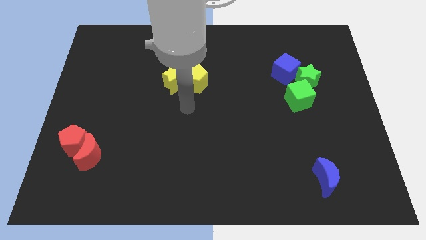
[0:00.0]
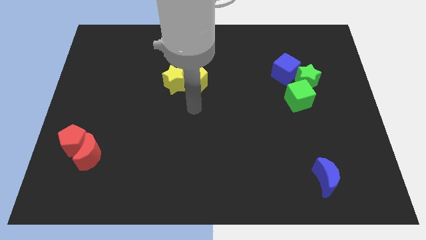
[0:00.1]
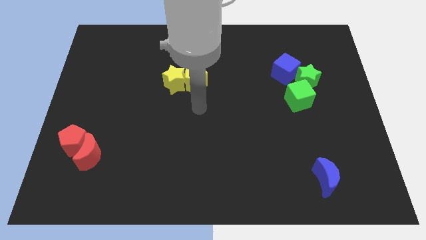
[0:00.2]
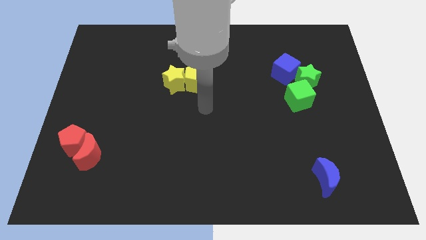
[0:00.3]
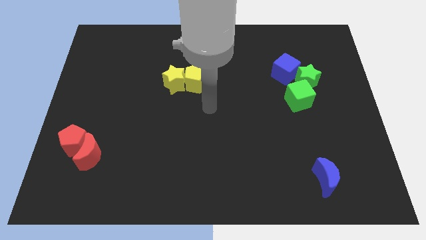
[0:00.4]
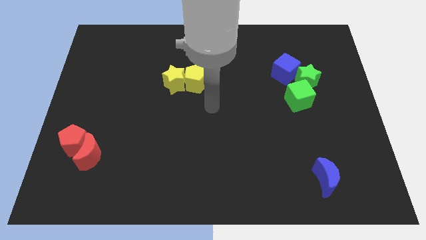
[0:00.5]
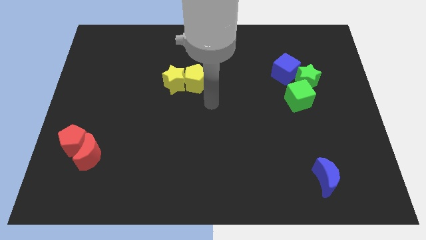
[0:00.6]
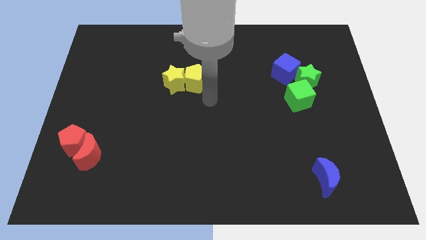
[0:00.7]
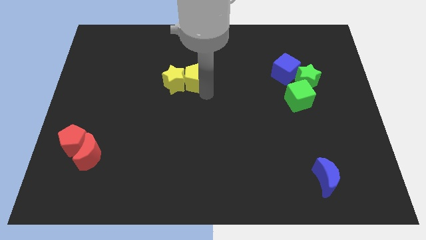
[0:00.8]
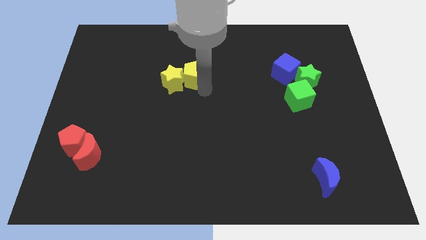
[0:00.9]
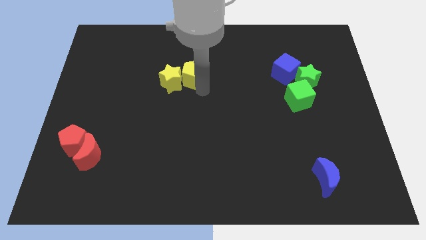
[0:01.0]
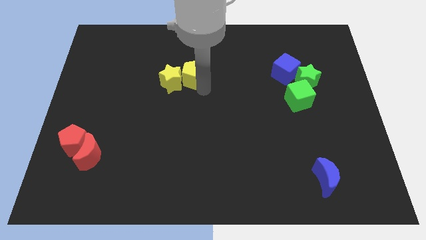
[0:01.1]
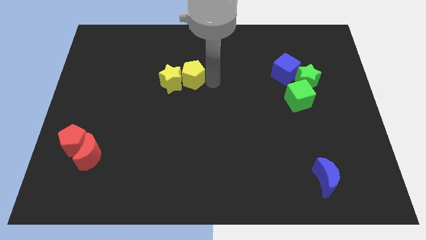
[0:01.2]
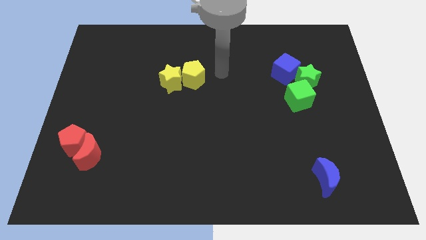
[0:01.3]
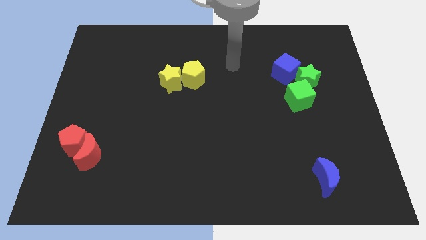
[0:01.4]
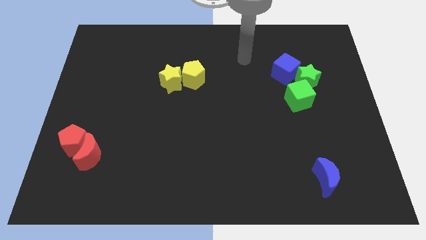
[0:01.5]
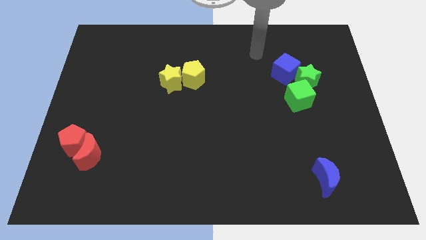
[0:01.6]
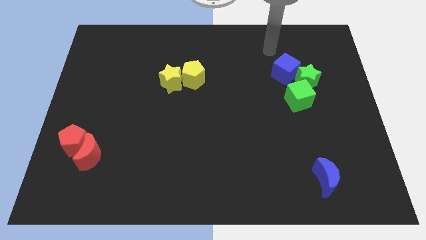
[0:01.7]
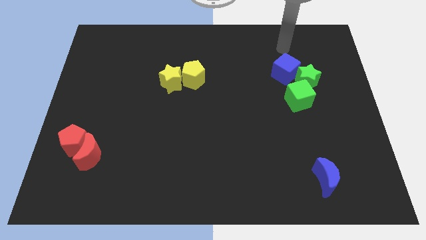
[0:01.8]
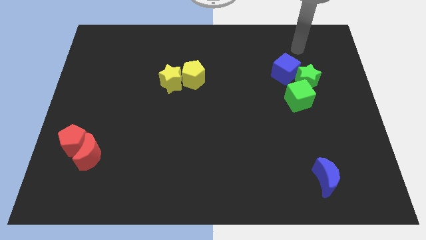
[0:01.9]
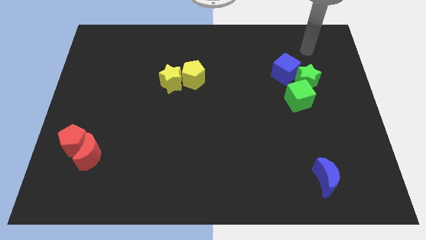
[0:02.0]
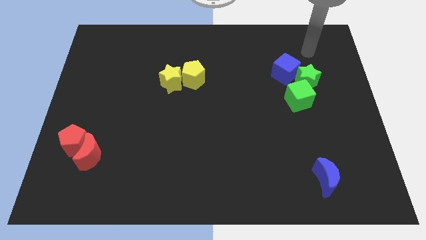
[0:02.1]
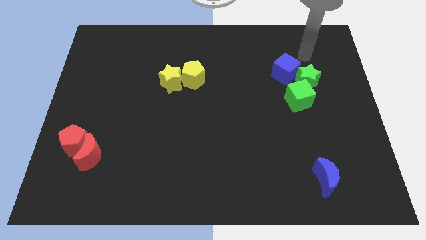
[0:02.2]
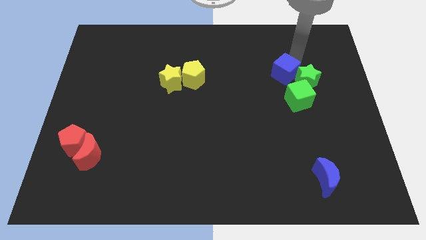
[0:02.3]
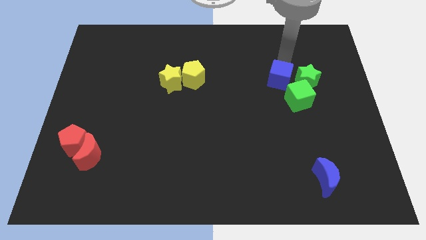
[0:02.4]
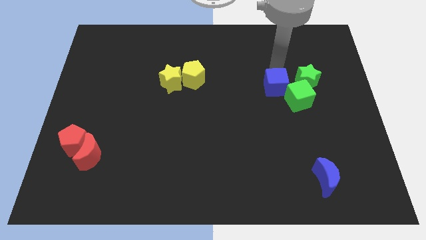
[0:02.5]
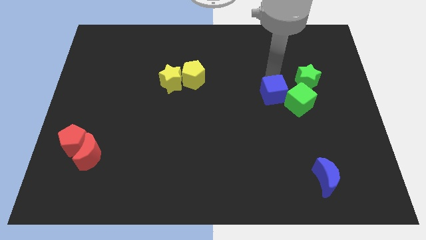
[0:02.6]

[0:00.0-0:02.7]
move the blue cube slightly down

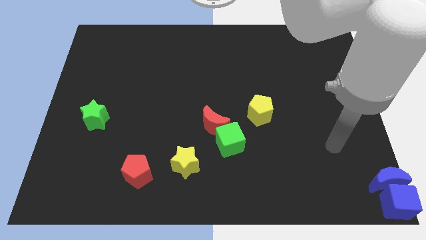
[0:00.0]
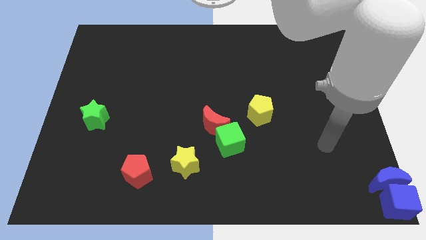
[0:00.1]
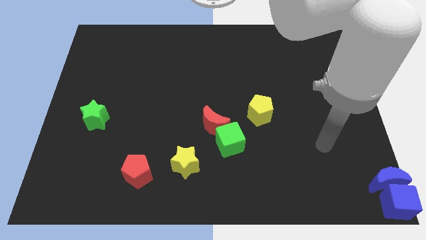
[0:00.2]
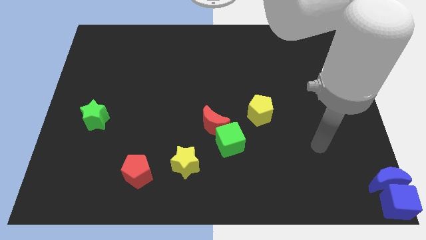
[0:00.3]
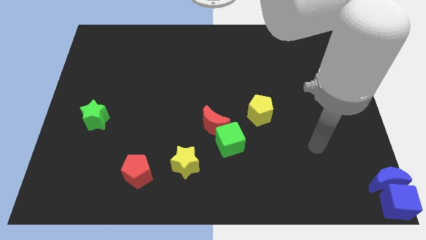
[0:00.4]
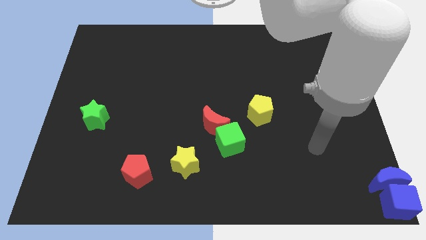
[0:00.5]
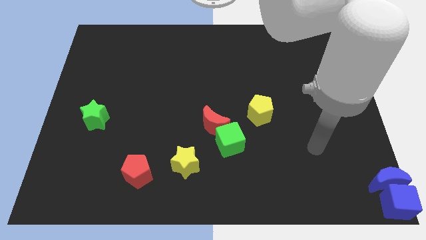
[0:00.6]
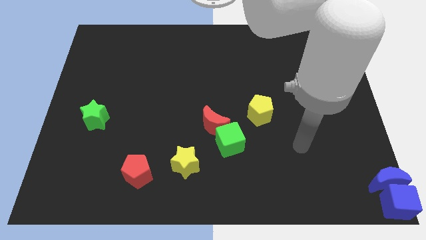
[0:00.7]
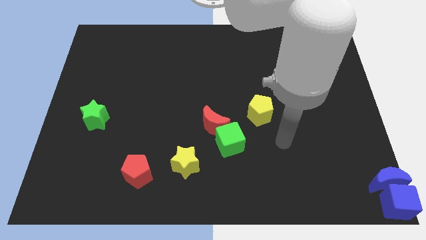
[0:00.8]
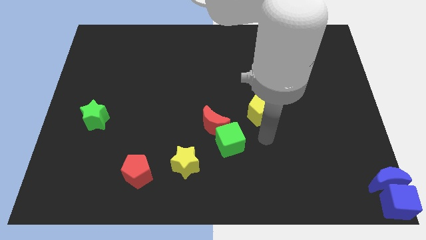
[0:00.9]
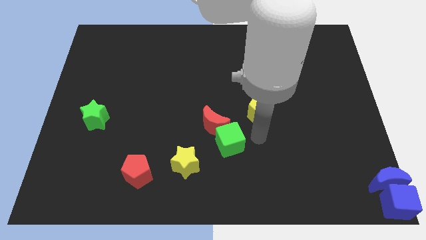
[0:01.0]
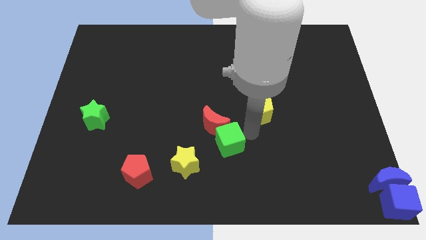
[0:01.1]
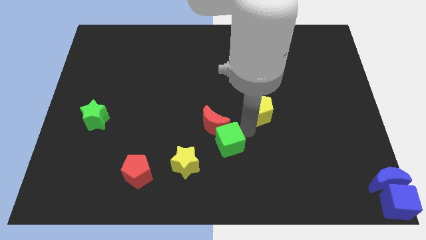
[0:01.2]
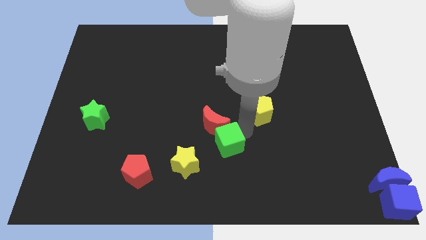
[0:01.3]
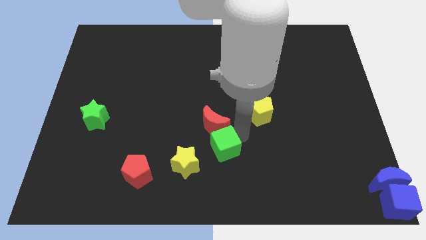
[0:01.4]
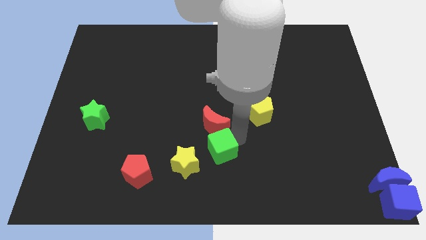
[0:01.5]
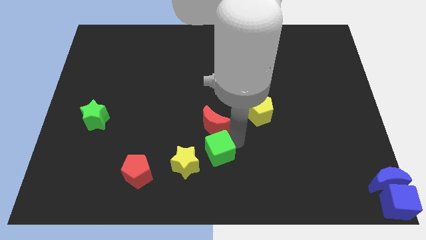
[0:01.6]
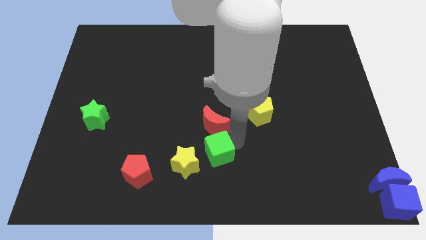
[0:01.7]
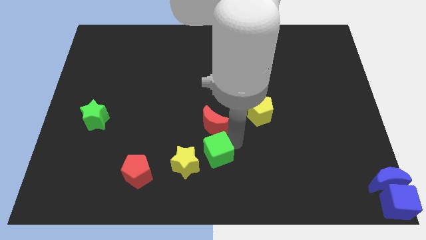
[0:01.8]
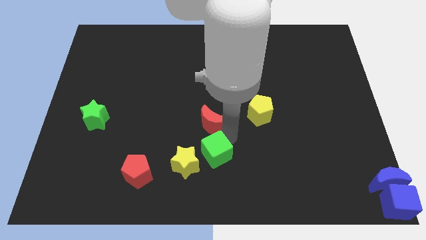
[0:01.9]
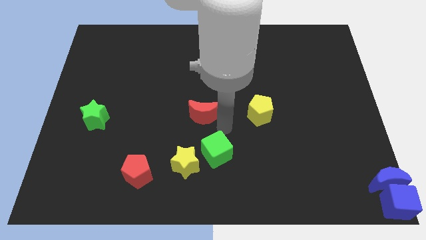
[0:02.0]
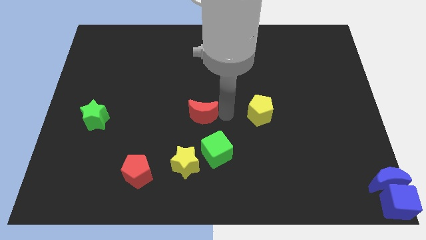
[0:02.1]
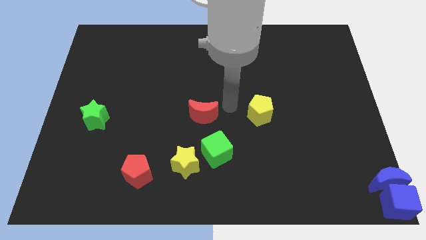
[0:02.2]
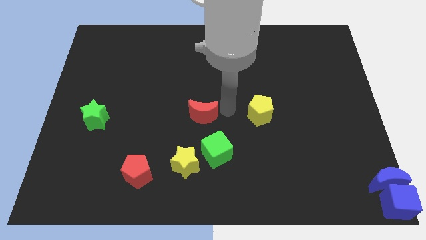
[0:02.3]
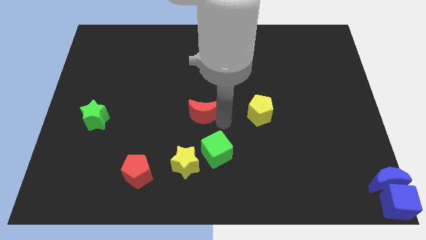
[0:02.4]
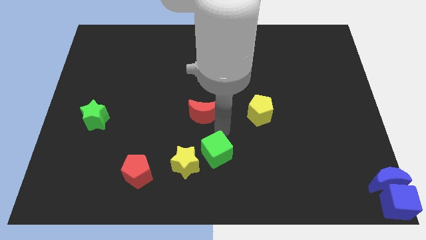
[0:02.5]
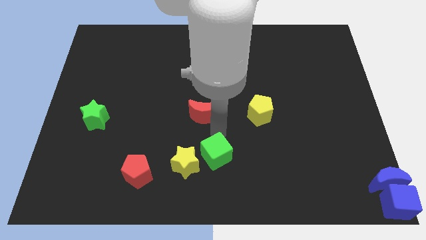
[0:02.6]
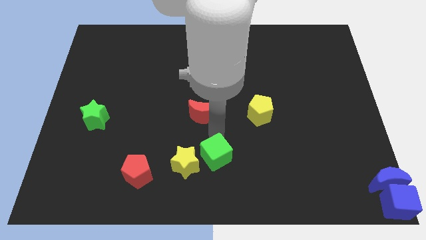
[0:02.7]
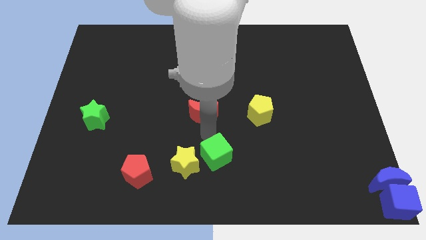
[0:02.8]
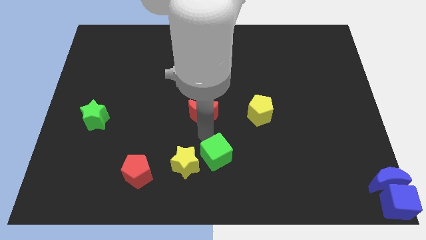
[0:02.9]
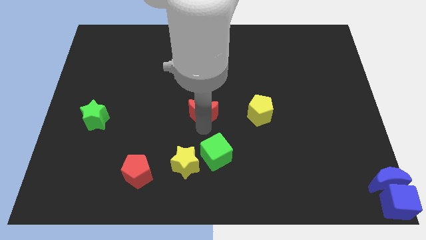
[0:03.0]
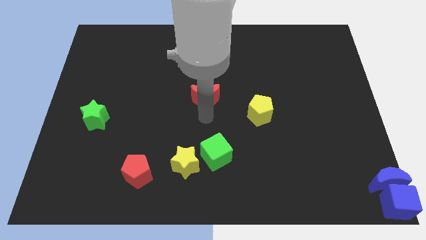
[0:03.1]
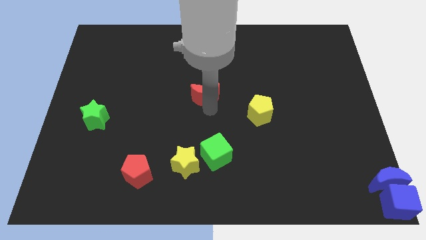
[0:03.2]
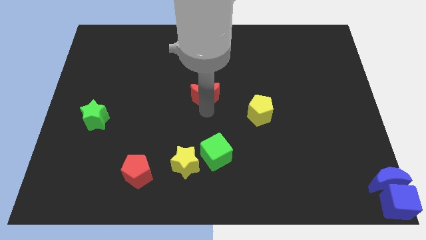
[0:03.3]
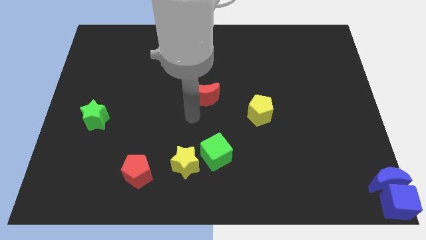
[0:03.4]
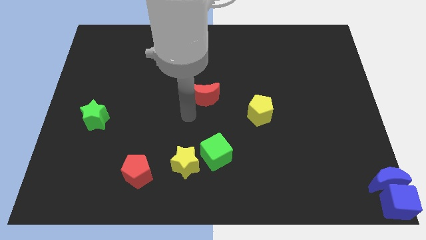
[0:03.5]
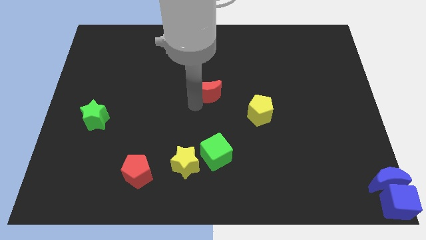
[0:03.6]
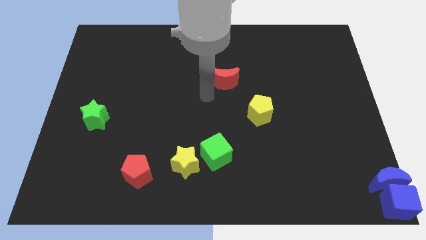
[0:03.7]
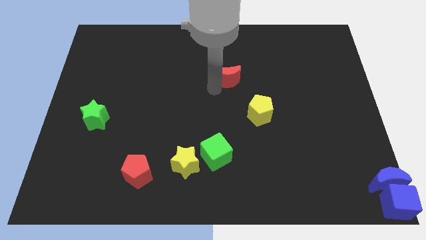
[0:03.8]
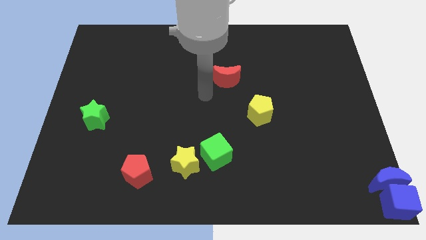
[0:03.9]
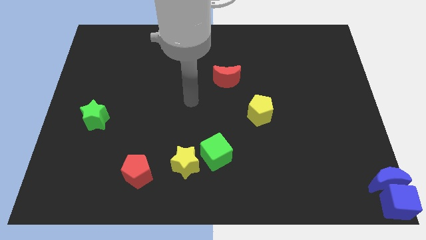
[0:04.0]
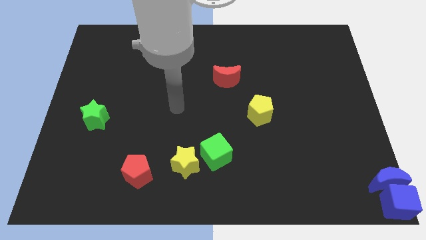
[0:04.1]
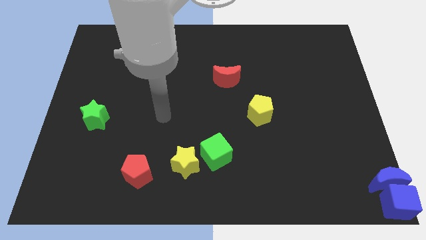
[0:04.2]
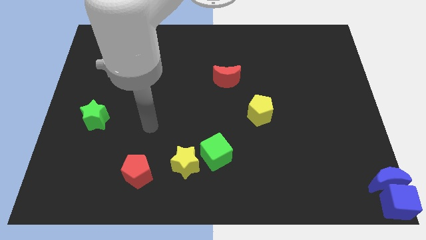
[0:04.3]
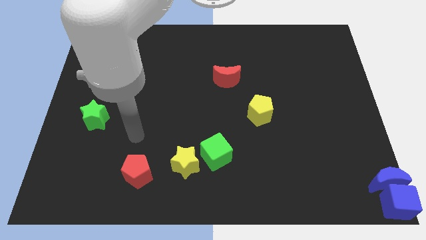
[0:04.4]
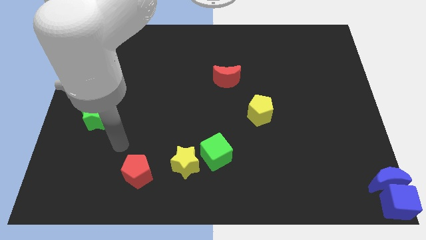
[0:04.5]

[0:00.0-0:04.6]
push the red crescent to the top of the board

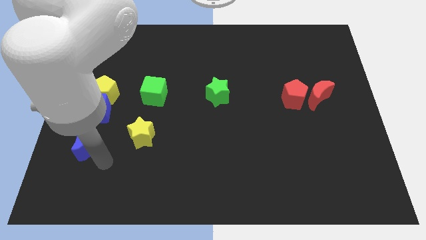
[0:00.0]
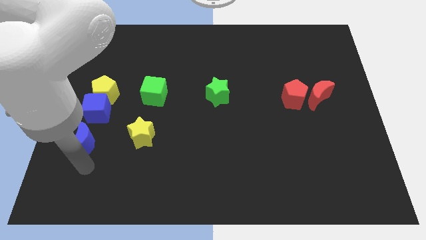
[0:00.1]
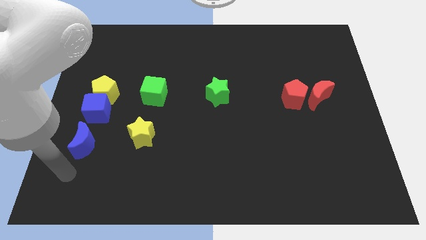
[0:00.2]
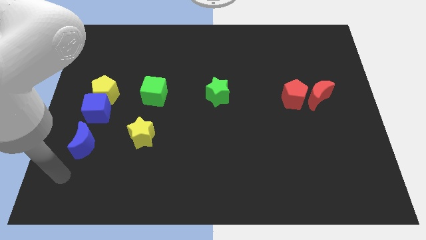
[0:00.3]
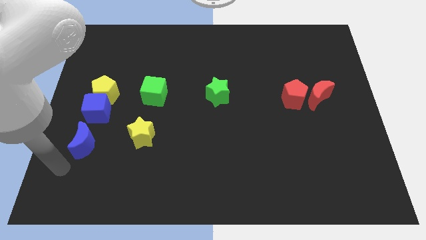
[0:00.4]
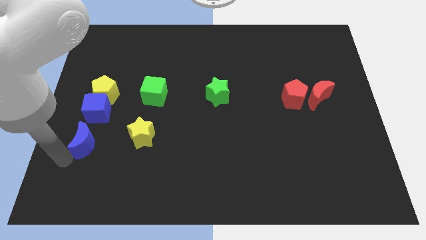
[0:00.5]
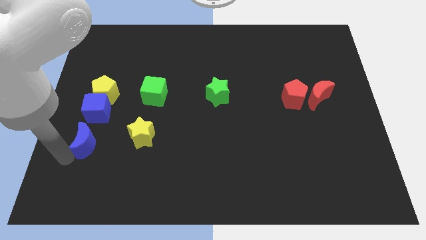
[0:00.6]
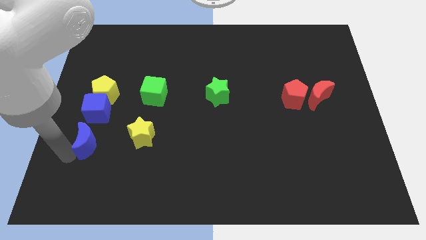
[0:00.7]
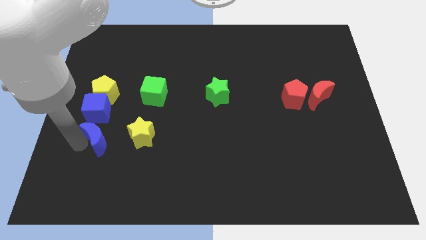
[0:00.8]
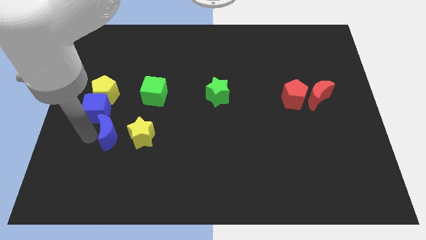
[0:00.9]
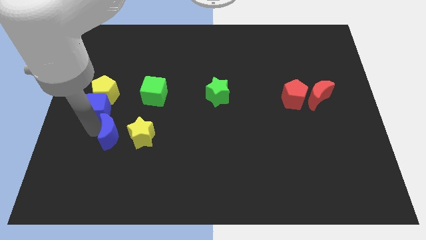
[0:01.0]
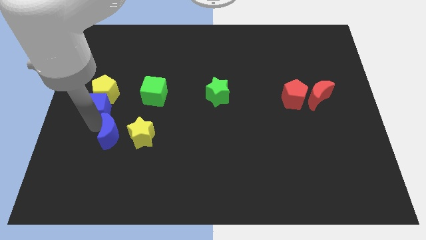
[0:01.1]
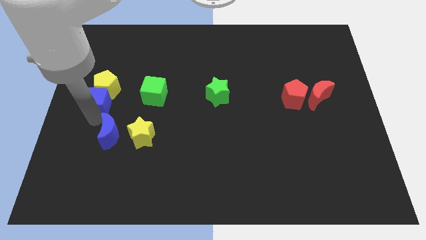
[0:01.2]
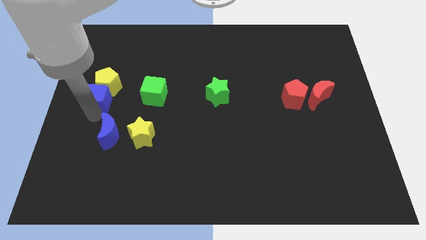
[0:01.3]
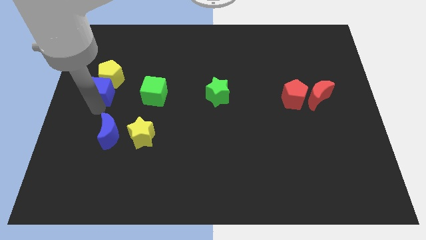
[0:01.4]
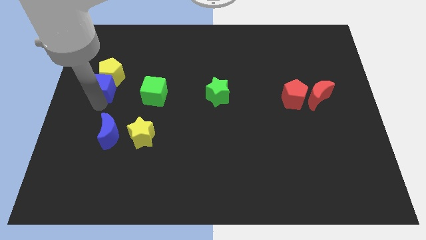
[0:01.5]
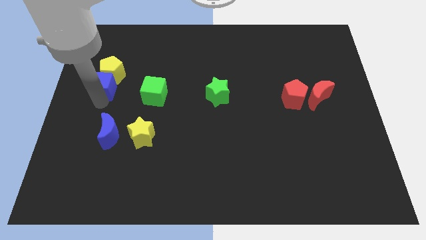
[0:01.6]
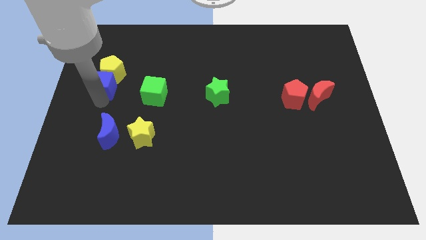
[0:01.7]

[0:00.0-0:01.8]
separate the blue blocks
